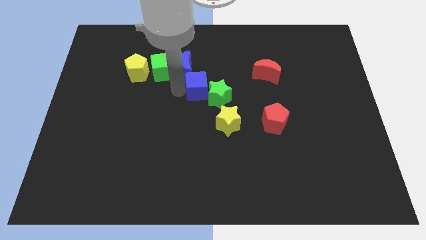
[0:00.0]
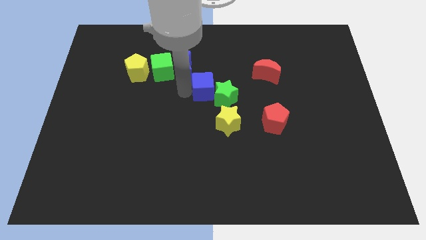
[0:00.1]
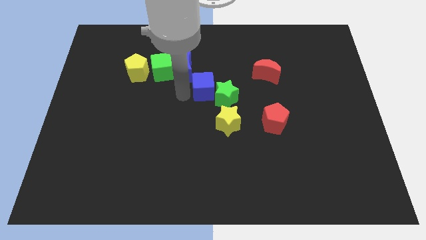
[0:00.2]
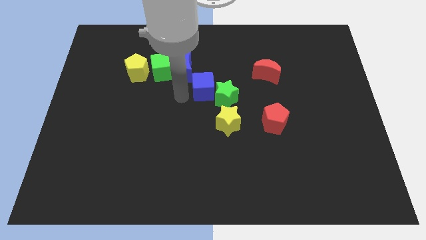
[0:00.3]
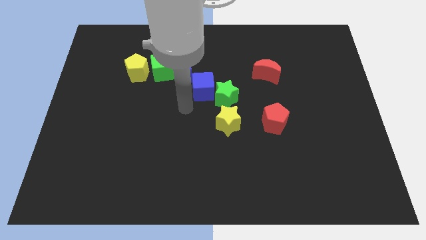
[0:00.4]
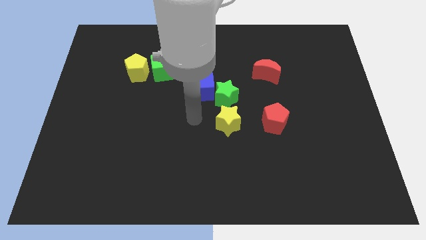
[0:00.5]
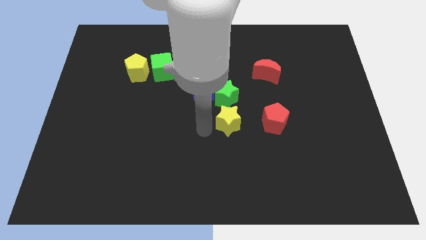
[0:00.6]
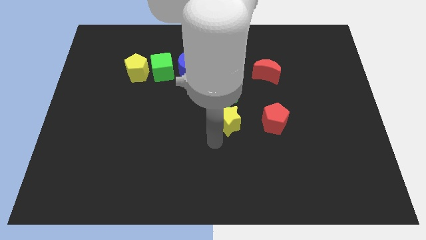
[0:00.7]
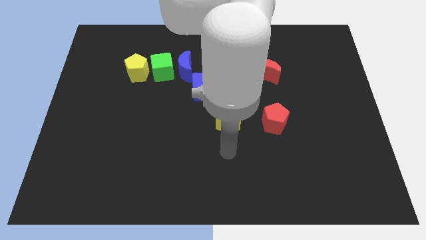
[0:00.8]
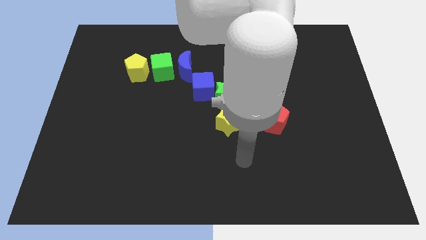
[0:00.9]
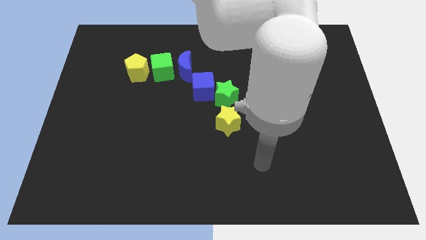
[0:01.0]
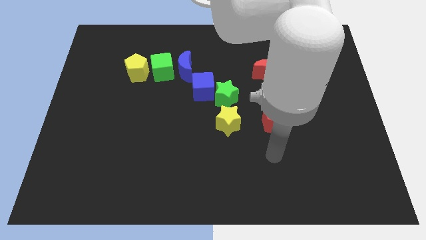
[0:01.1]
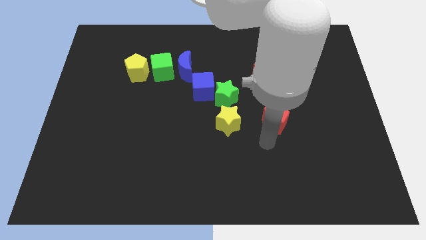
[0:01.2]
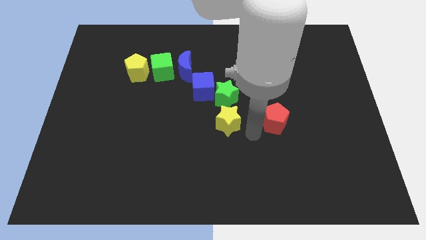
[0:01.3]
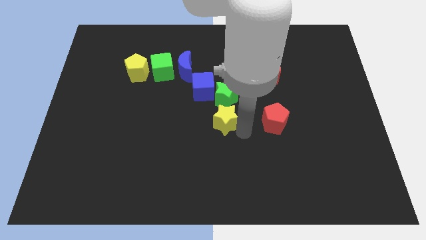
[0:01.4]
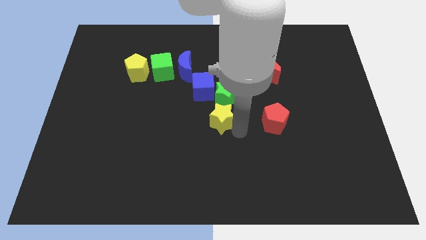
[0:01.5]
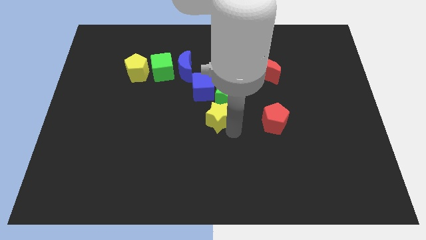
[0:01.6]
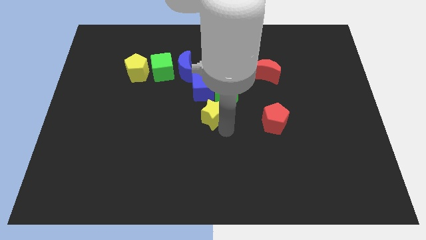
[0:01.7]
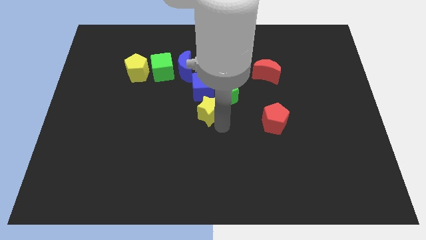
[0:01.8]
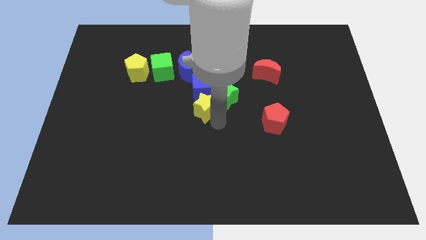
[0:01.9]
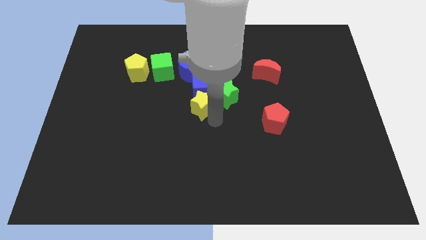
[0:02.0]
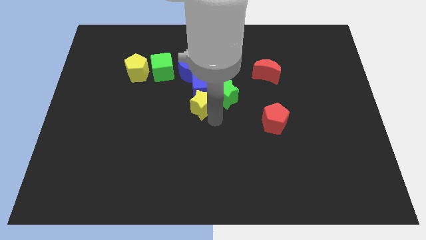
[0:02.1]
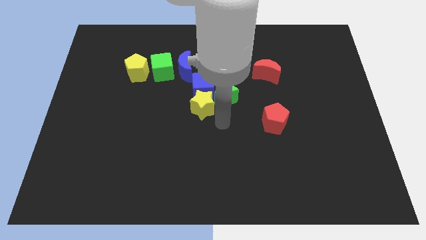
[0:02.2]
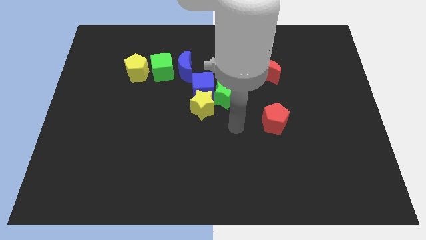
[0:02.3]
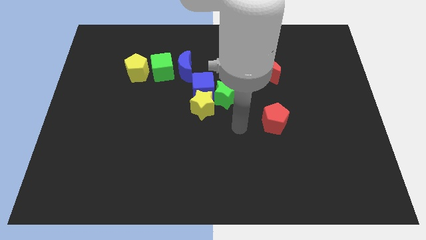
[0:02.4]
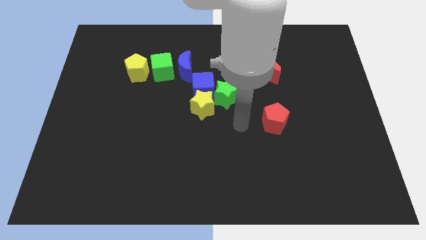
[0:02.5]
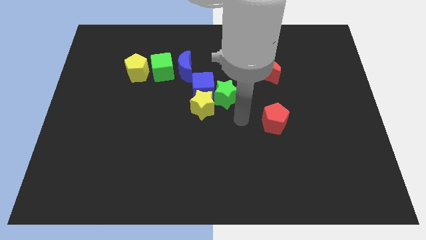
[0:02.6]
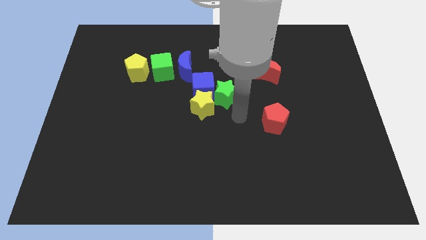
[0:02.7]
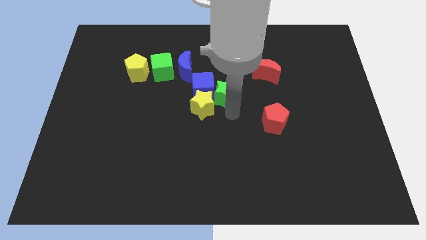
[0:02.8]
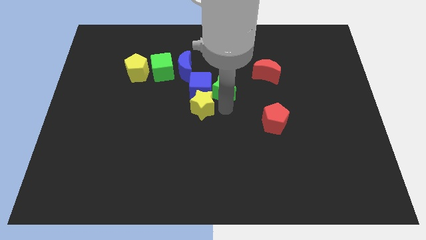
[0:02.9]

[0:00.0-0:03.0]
push the yellow star to the bottom of the blue cube

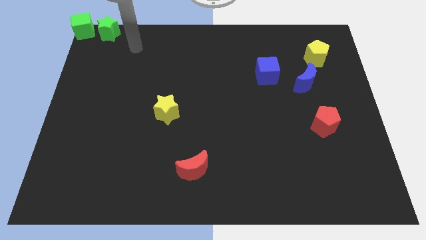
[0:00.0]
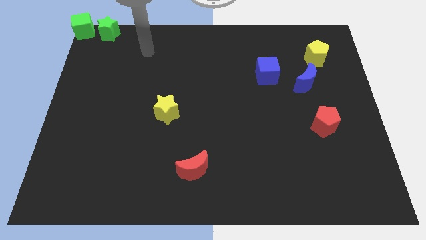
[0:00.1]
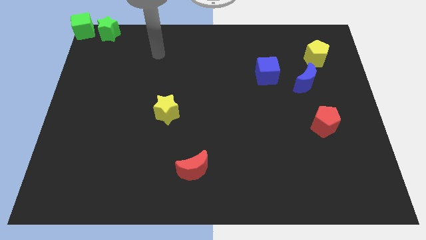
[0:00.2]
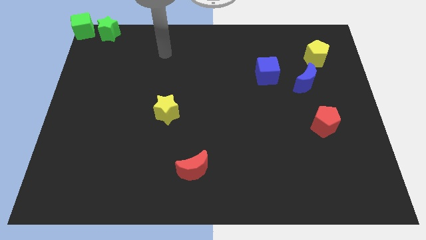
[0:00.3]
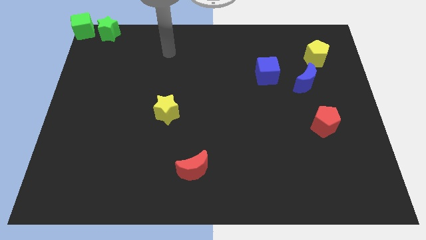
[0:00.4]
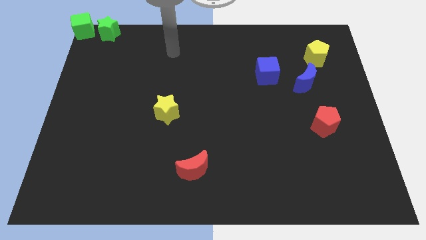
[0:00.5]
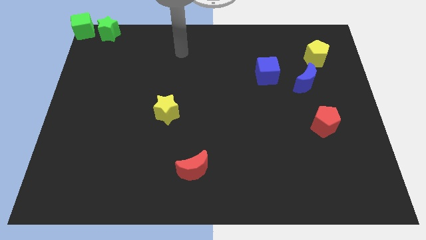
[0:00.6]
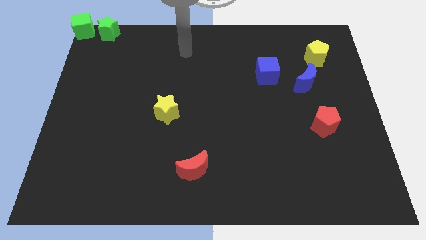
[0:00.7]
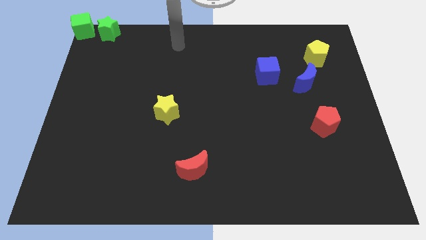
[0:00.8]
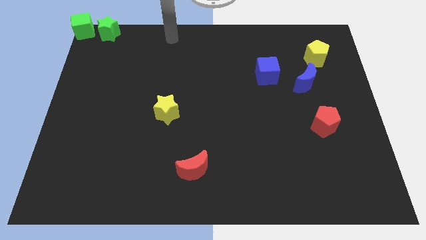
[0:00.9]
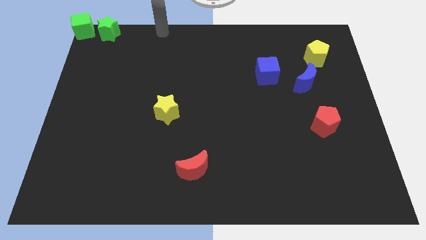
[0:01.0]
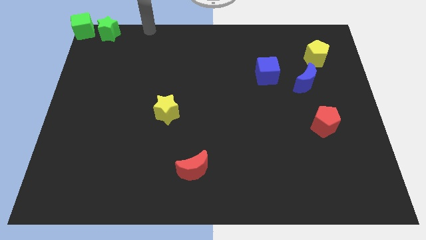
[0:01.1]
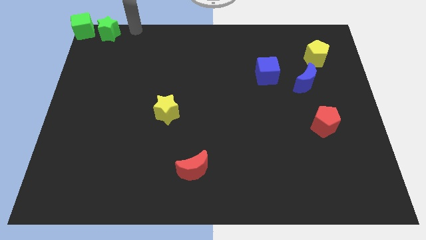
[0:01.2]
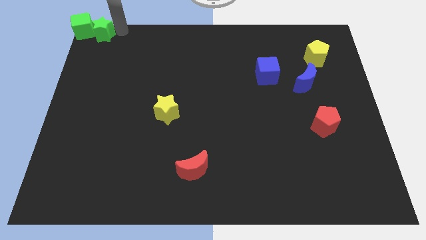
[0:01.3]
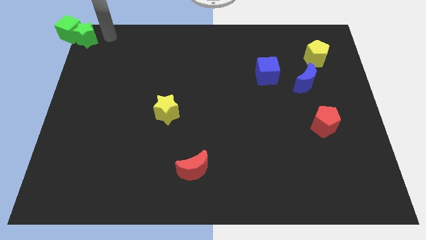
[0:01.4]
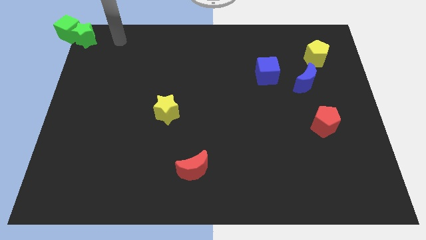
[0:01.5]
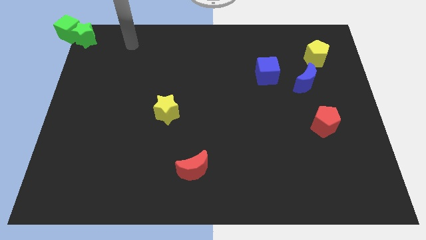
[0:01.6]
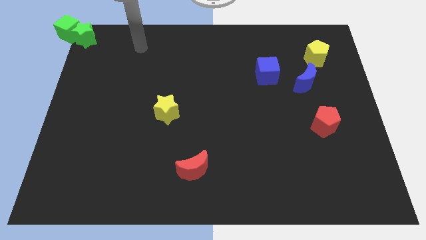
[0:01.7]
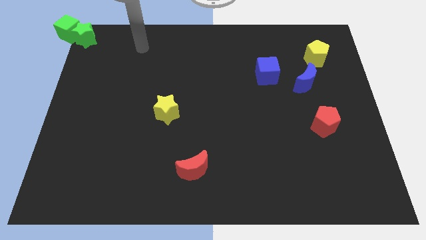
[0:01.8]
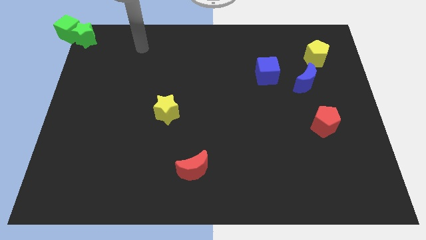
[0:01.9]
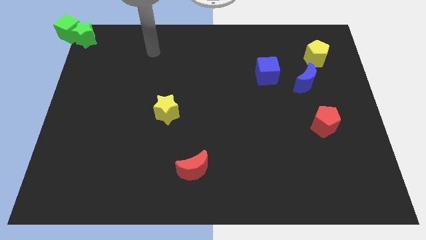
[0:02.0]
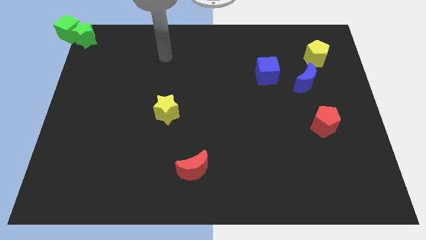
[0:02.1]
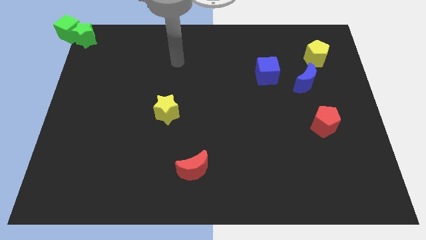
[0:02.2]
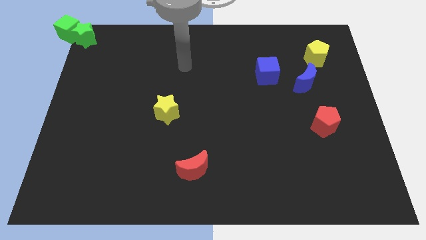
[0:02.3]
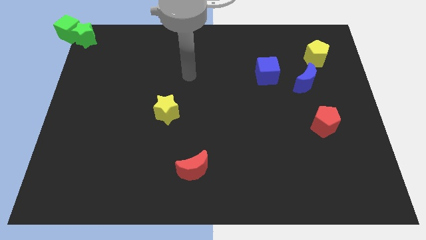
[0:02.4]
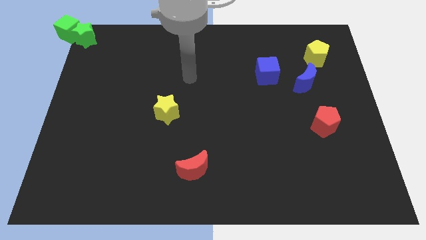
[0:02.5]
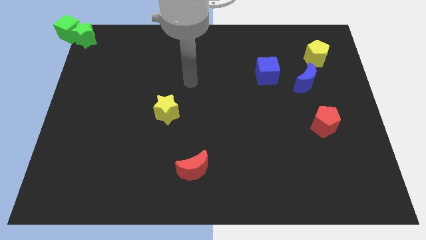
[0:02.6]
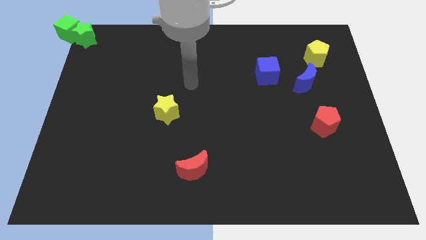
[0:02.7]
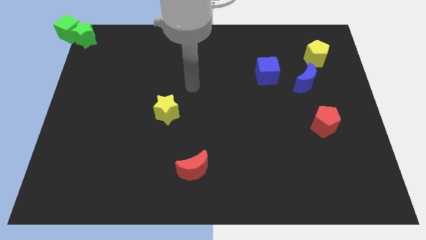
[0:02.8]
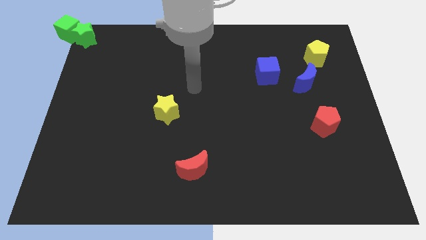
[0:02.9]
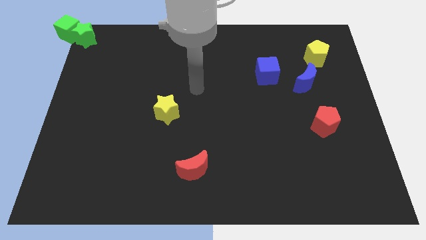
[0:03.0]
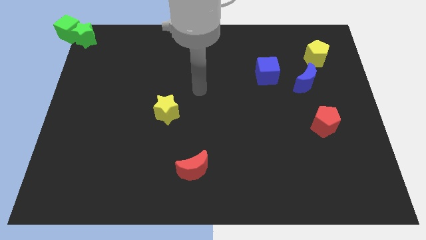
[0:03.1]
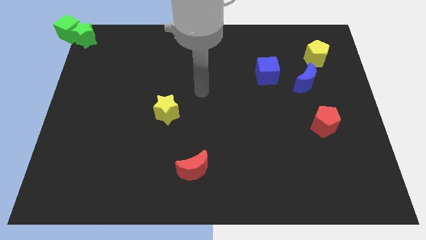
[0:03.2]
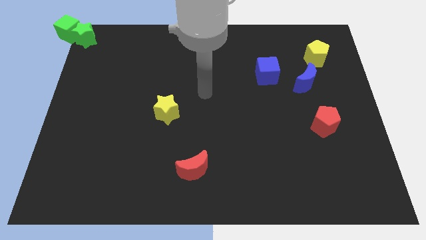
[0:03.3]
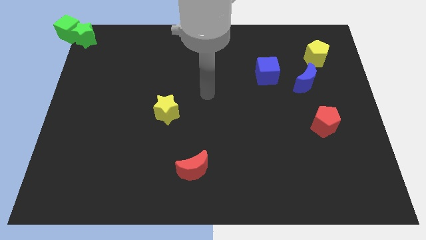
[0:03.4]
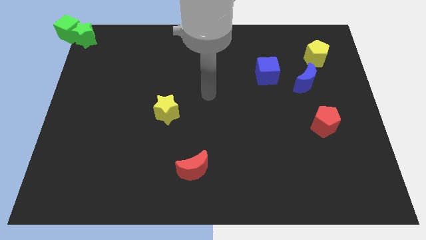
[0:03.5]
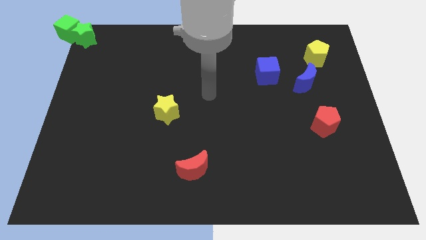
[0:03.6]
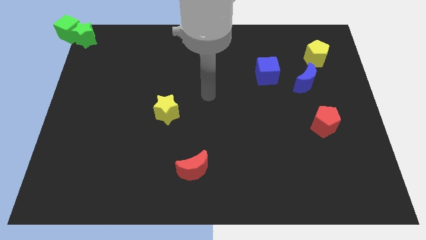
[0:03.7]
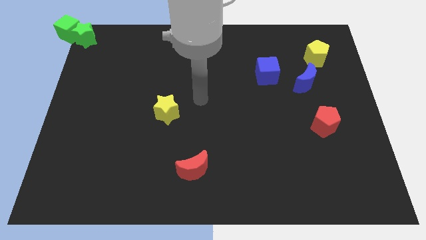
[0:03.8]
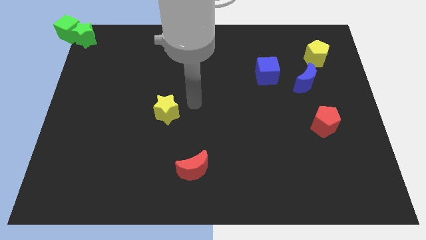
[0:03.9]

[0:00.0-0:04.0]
move the green star into the green cube

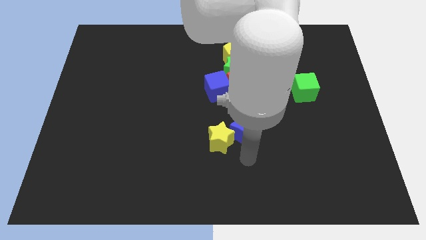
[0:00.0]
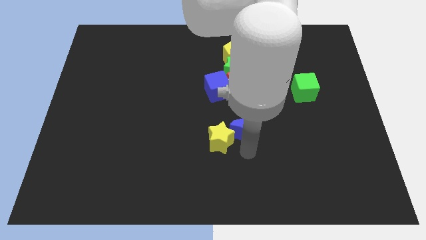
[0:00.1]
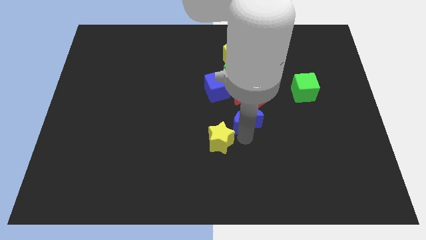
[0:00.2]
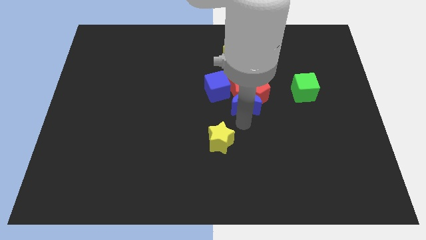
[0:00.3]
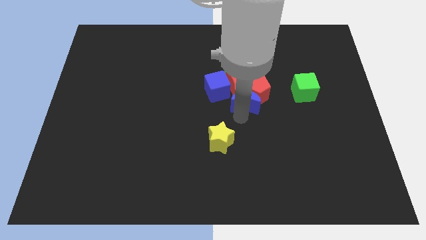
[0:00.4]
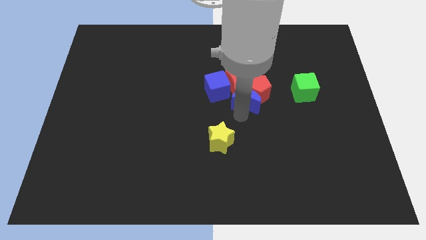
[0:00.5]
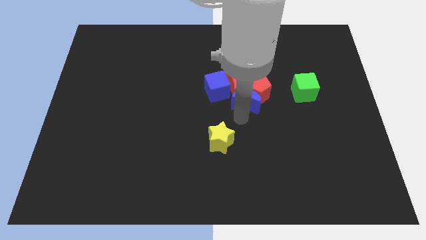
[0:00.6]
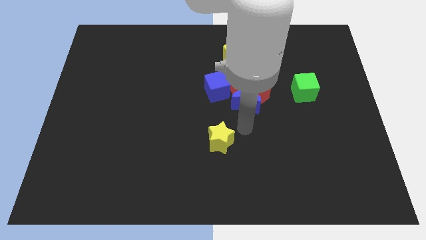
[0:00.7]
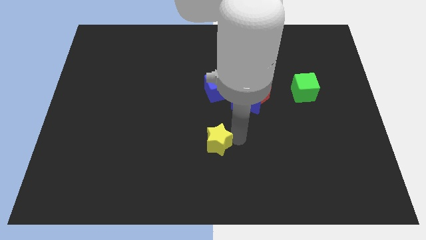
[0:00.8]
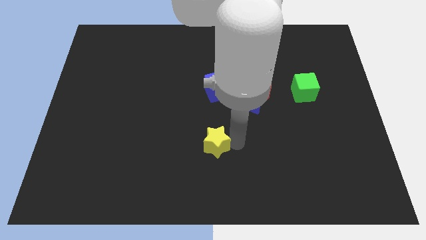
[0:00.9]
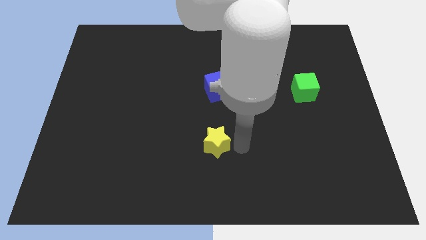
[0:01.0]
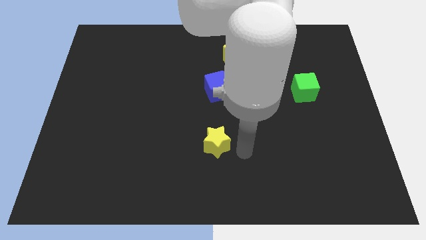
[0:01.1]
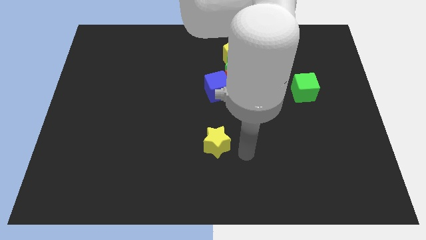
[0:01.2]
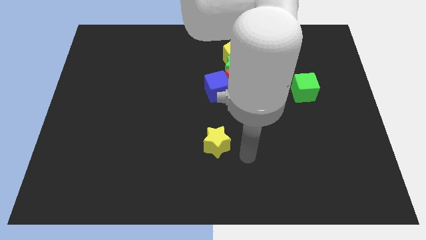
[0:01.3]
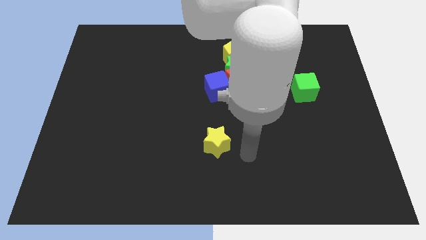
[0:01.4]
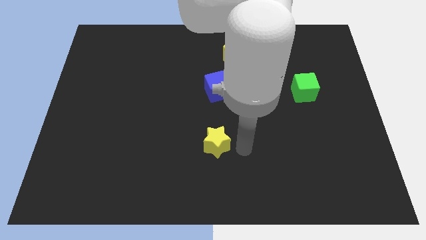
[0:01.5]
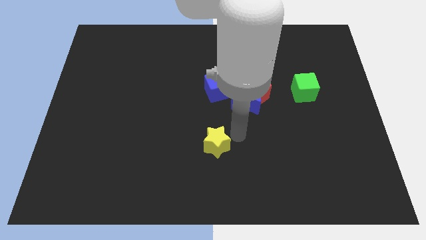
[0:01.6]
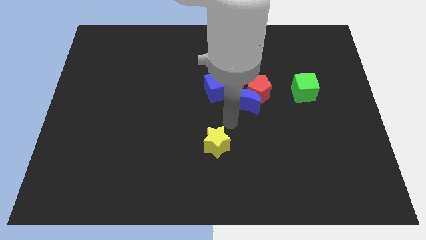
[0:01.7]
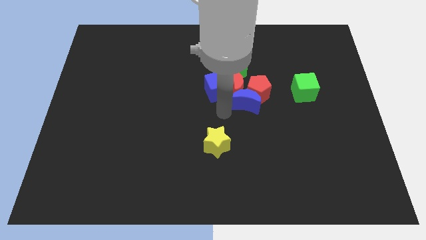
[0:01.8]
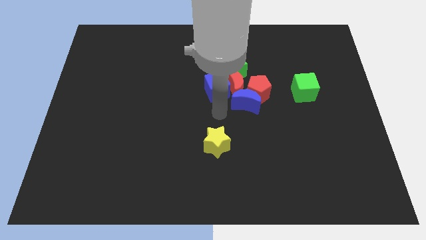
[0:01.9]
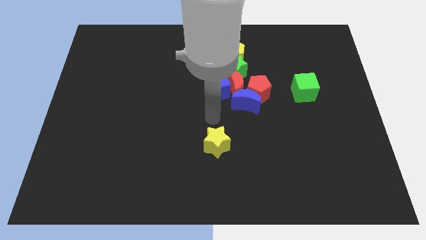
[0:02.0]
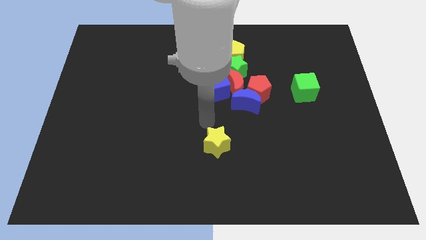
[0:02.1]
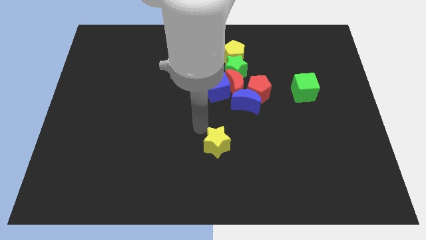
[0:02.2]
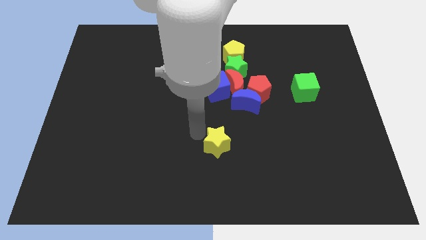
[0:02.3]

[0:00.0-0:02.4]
push the blue crescent into the red pentagon
